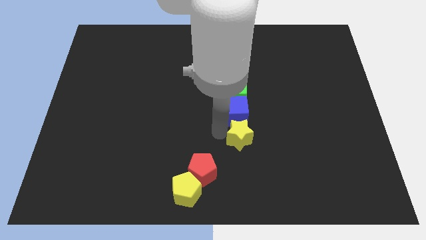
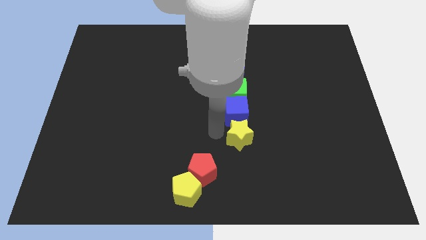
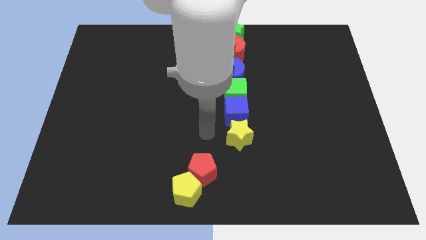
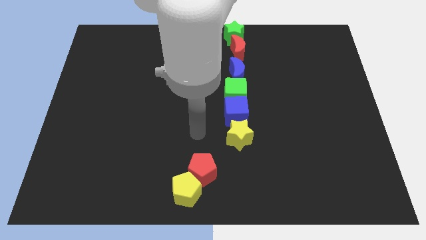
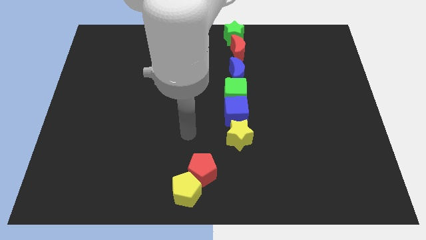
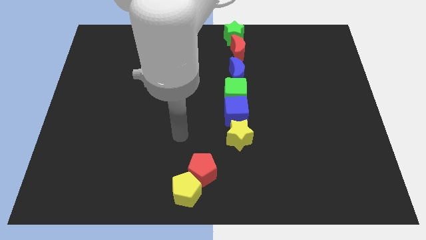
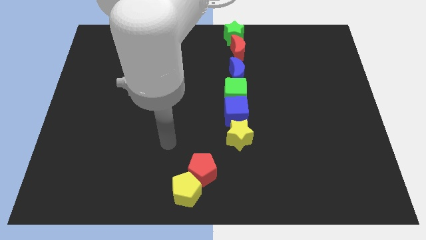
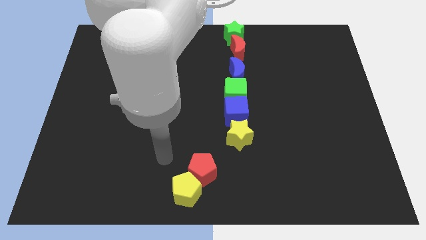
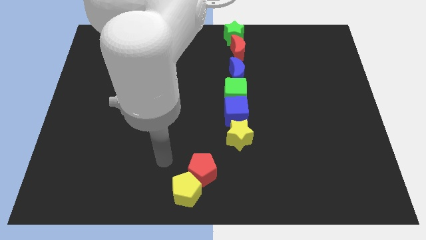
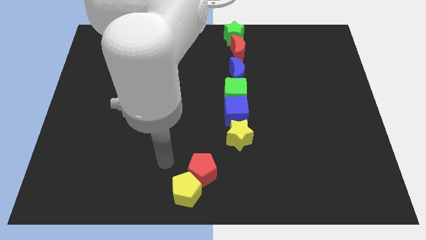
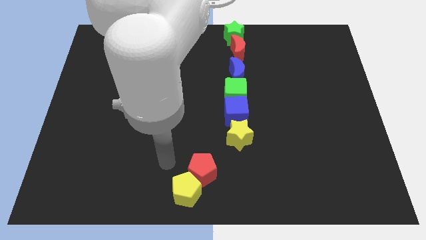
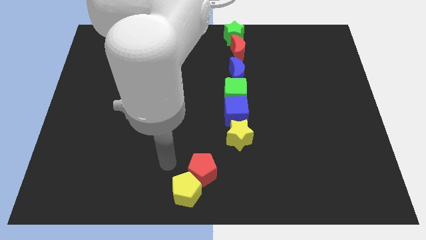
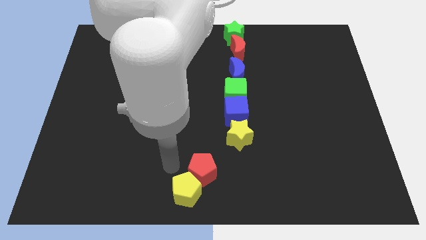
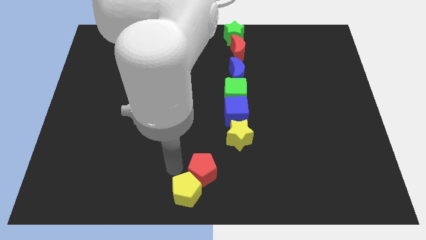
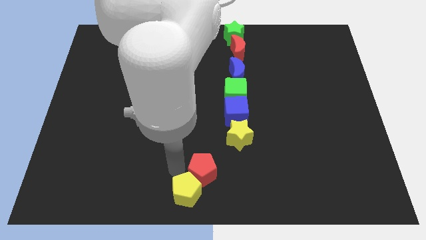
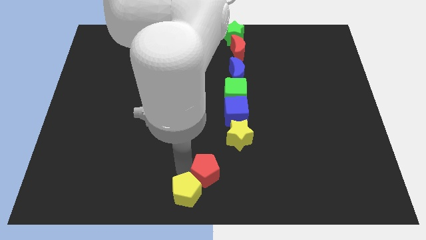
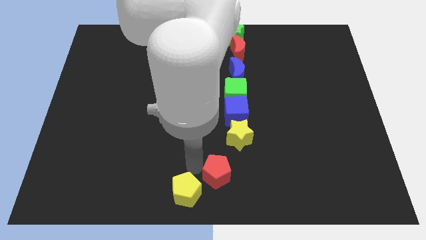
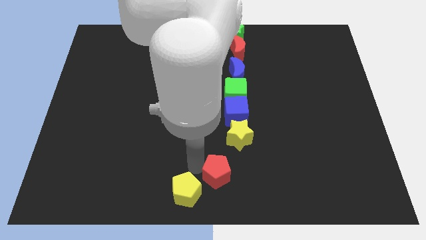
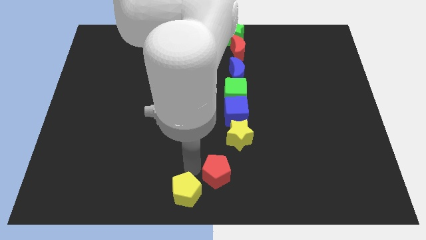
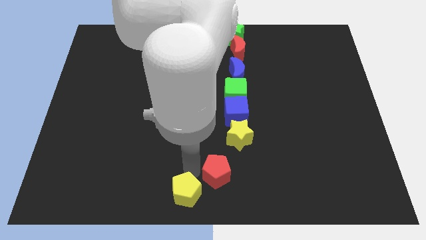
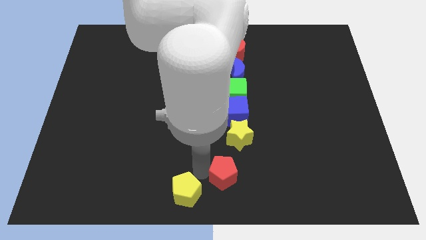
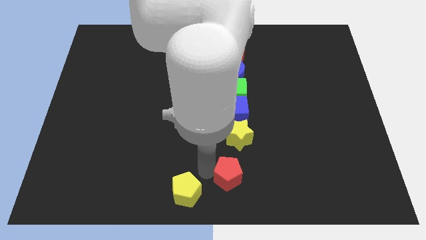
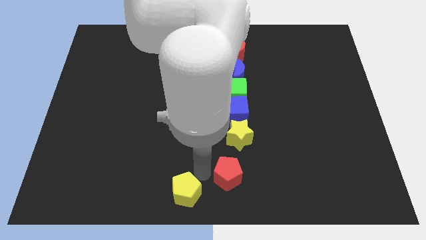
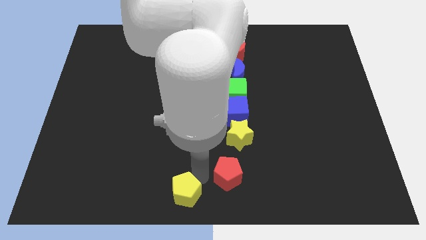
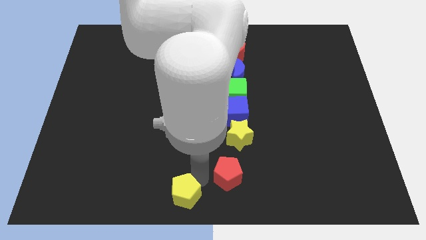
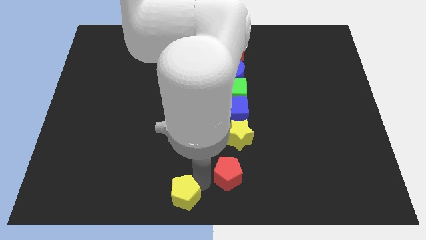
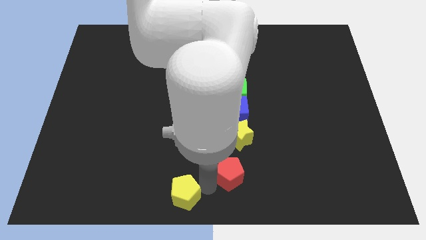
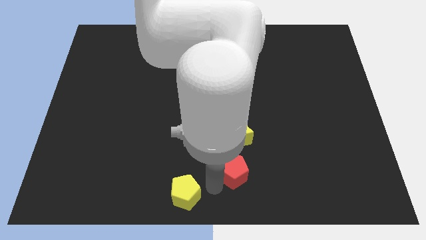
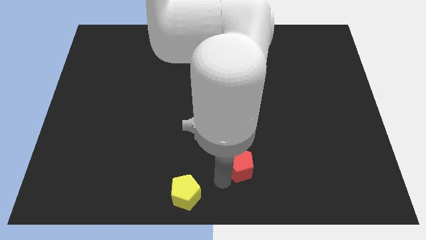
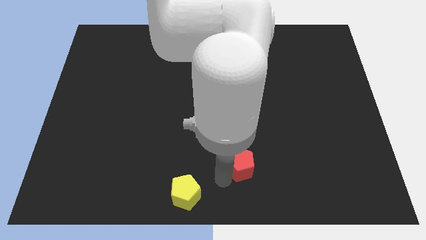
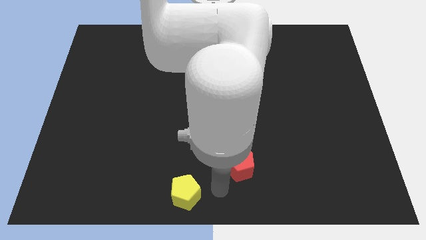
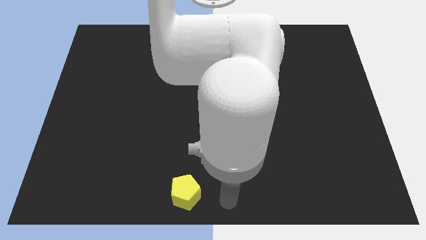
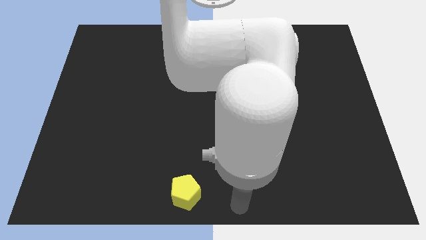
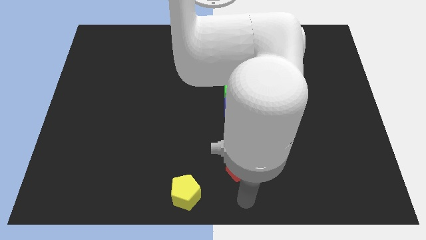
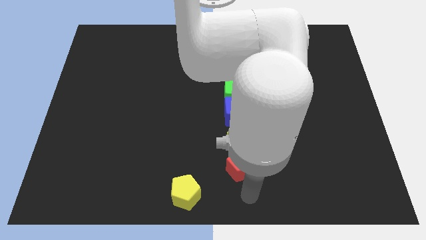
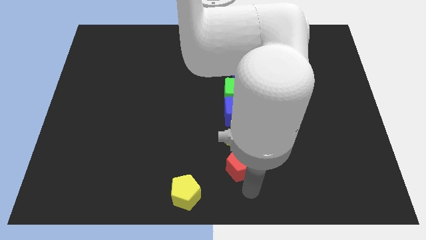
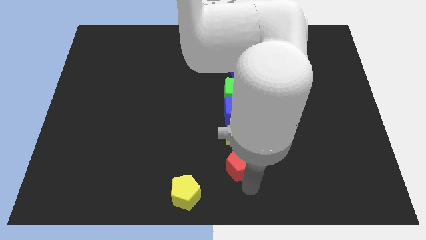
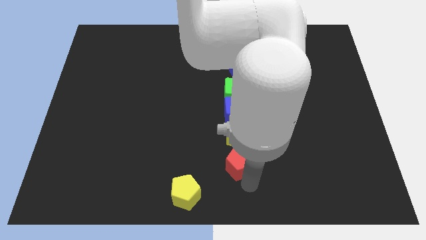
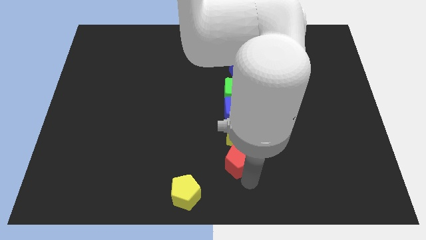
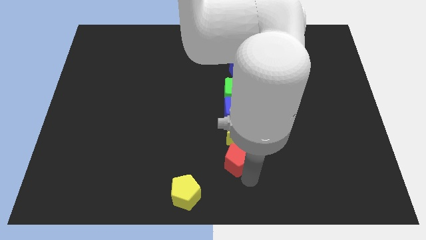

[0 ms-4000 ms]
push the red pentagon to the bottom of the yellow star

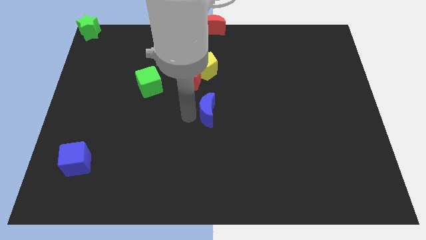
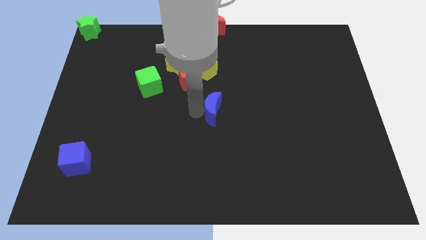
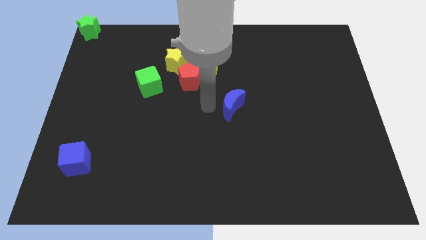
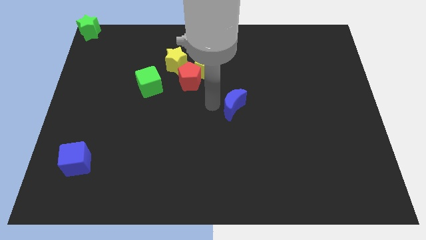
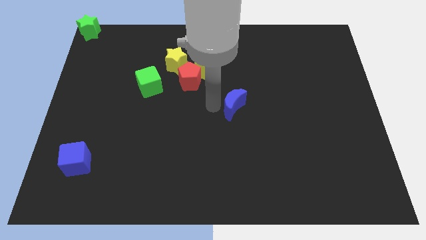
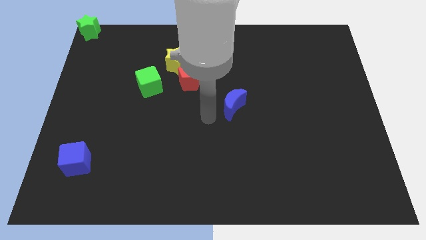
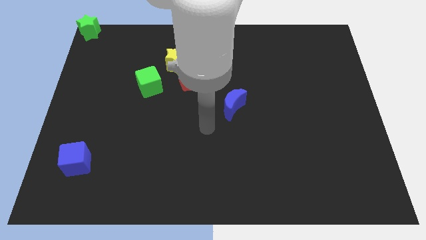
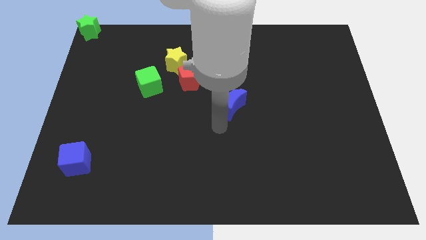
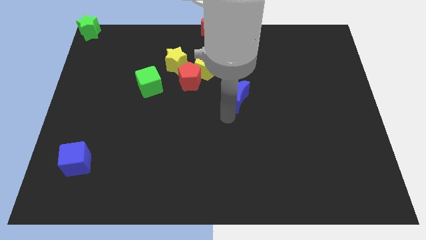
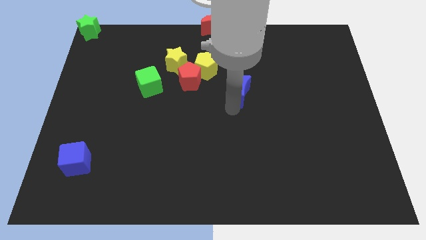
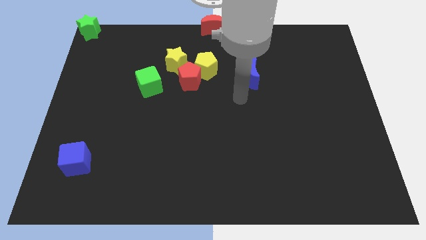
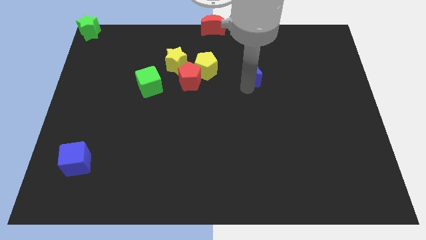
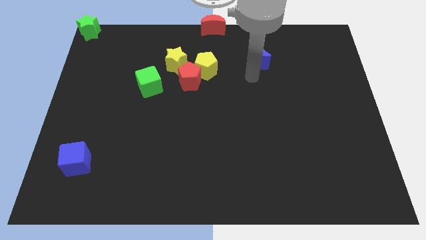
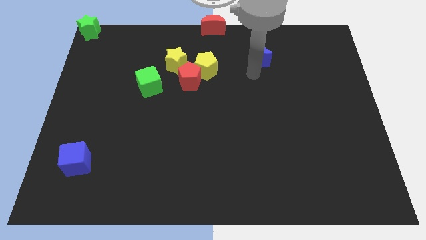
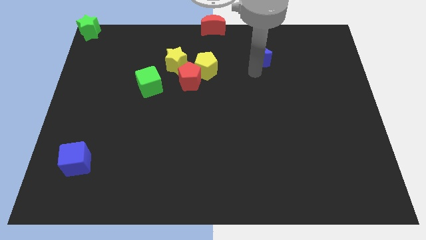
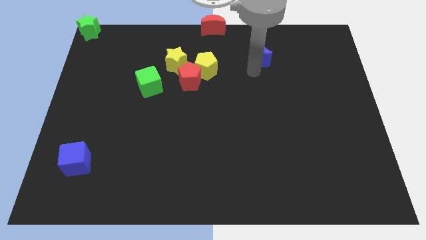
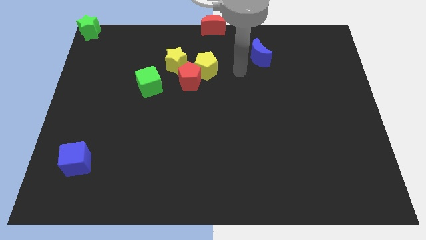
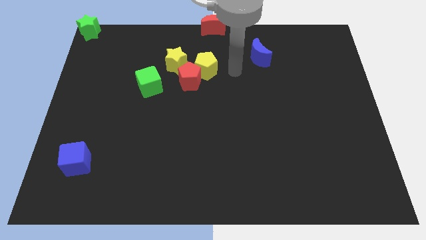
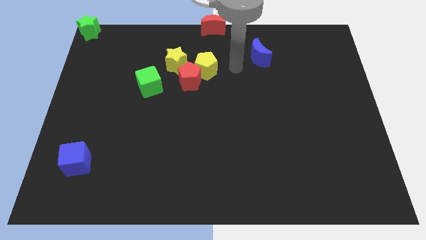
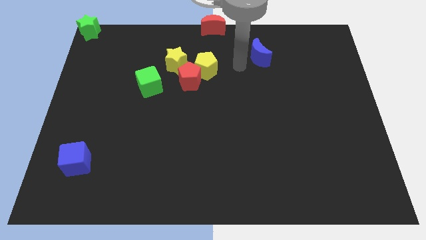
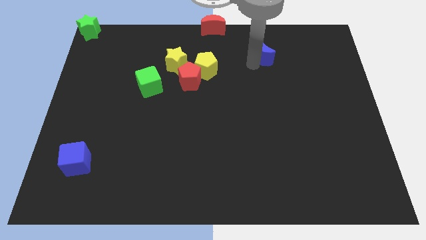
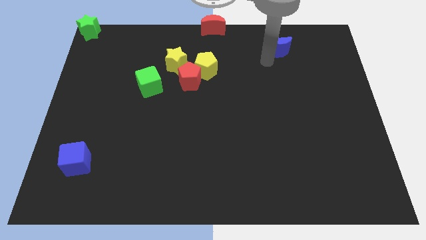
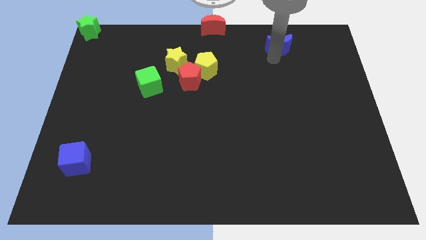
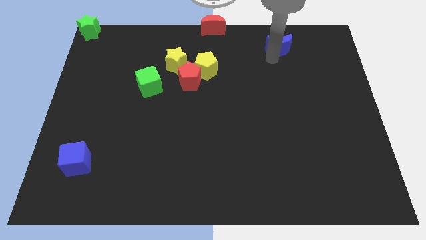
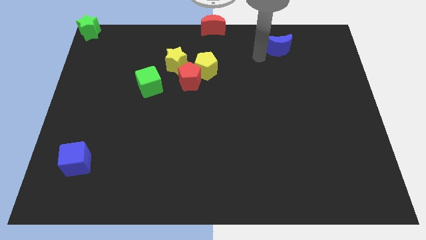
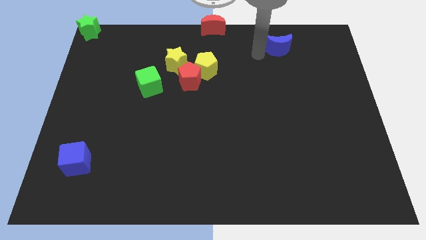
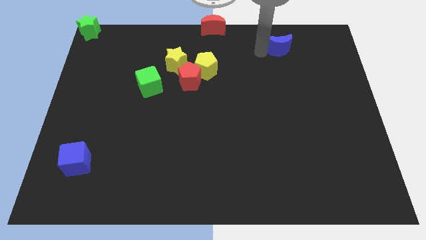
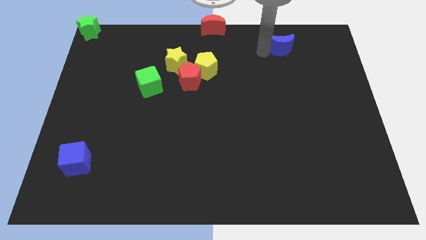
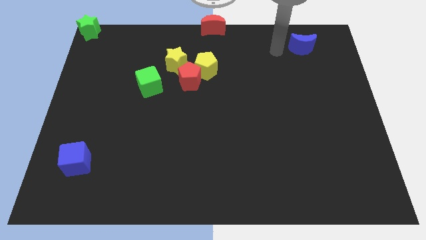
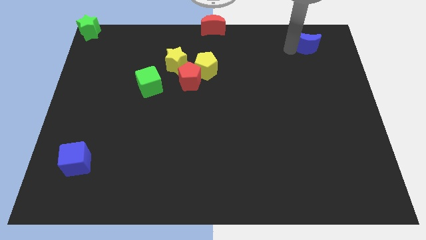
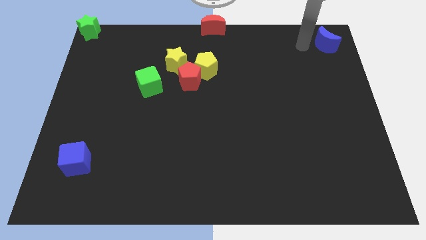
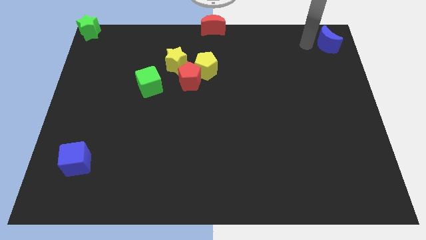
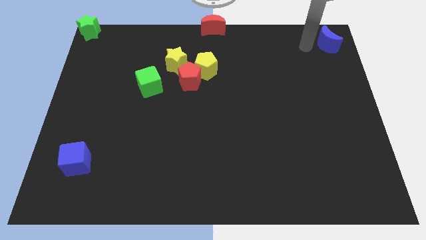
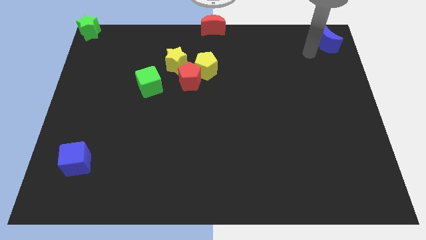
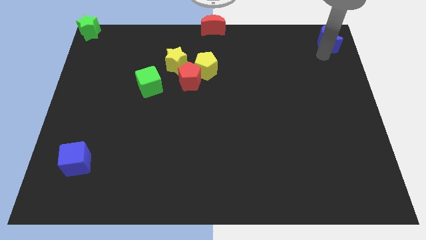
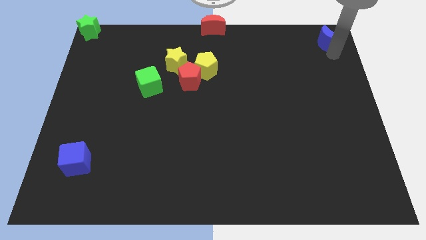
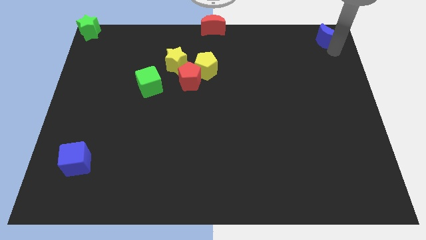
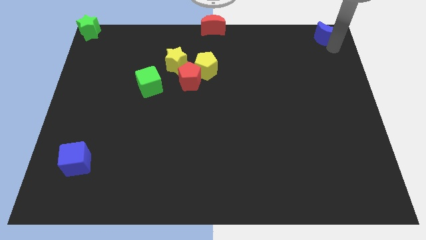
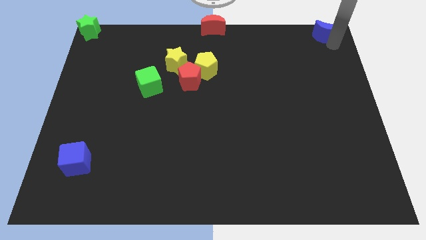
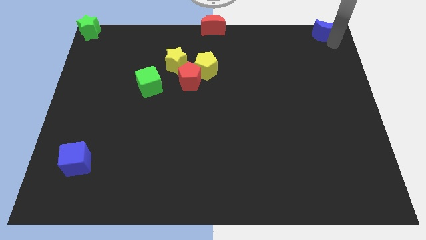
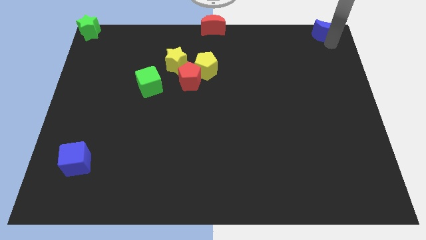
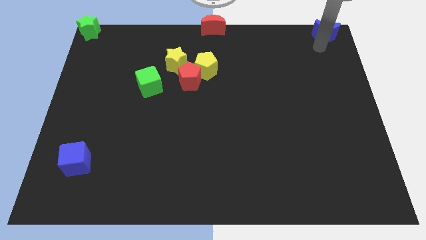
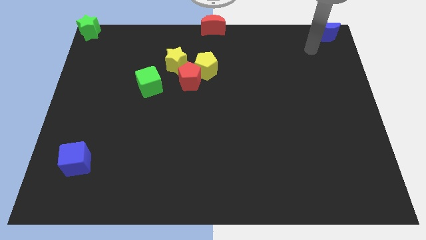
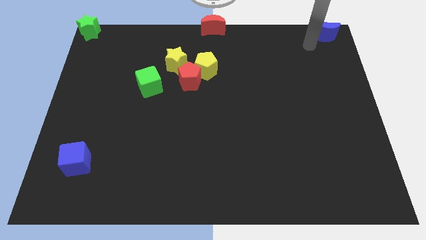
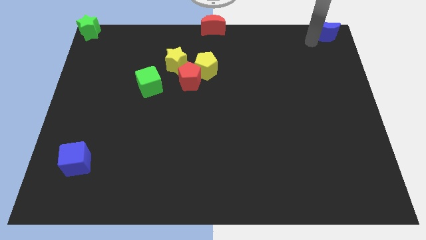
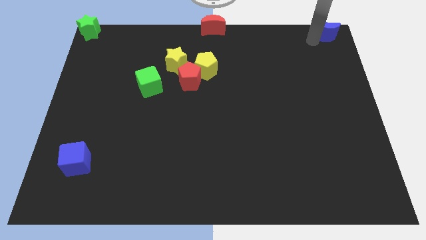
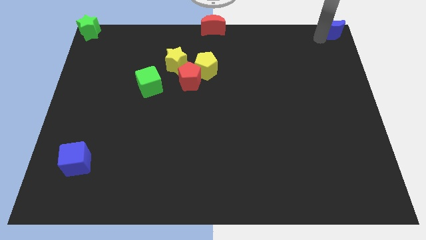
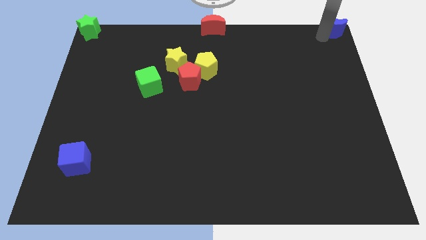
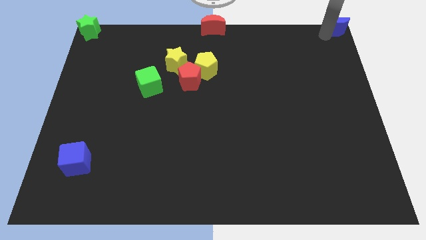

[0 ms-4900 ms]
slide the blue moon to the top right corner of the board

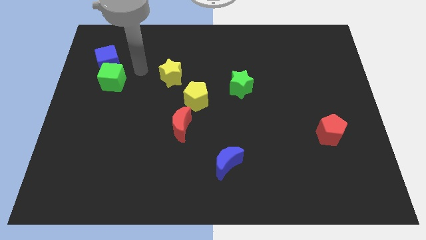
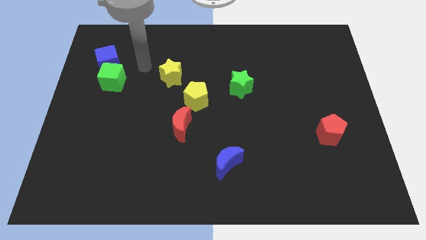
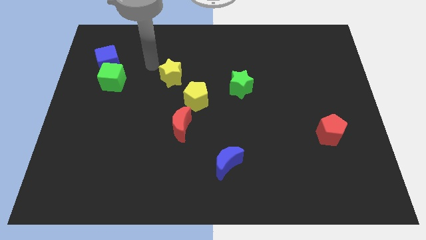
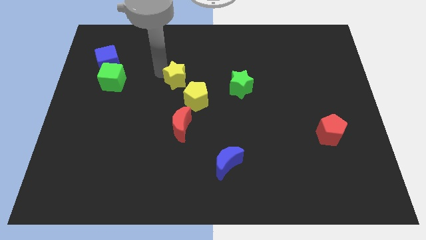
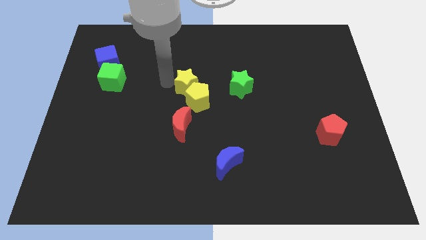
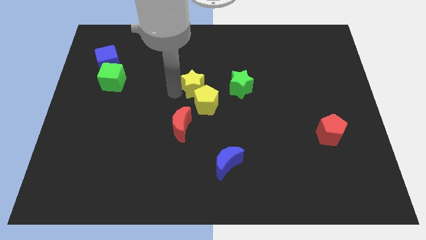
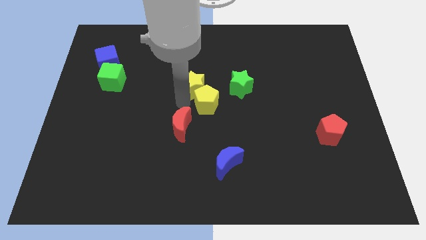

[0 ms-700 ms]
push the yellow star towards the center of the board
